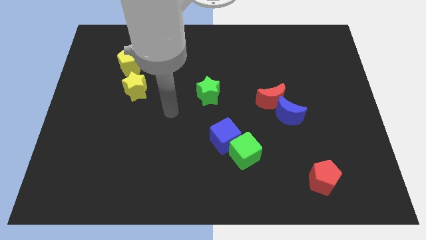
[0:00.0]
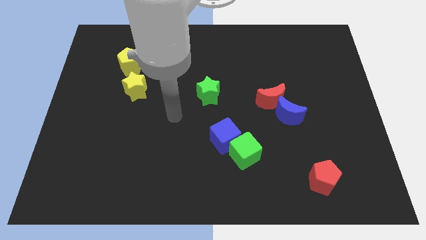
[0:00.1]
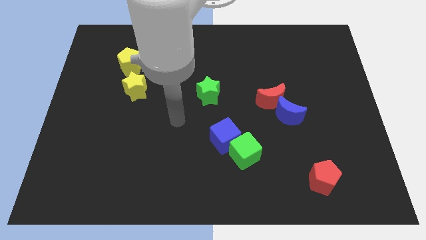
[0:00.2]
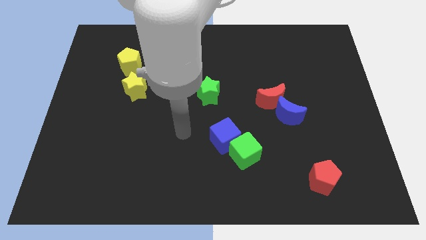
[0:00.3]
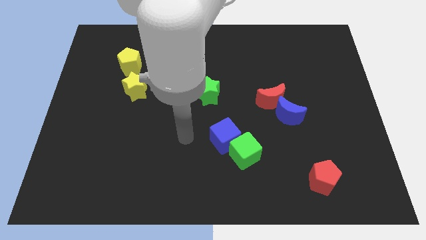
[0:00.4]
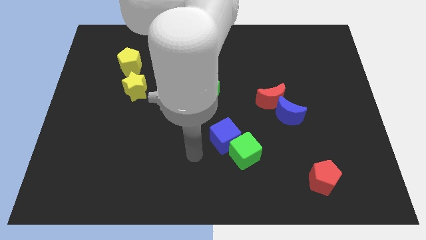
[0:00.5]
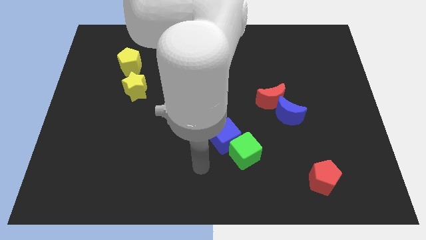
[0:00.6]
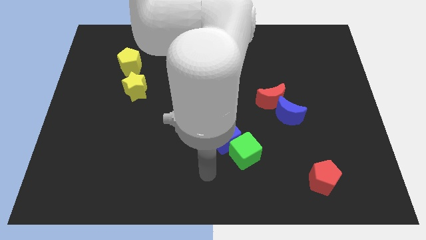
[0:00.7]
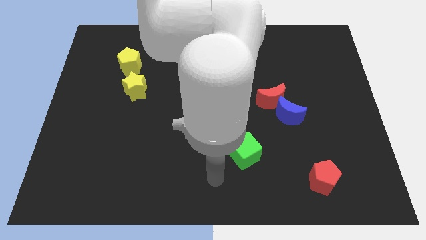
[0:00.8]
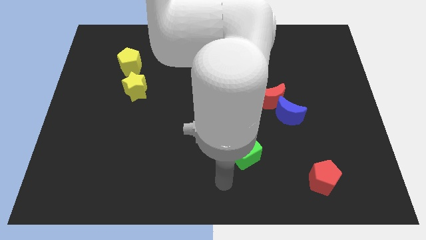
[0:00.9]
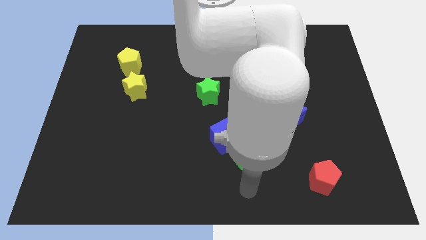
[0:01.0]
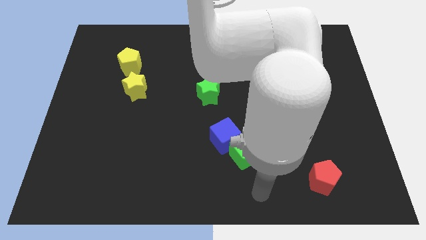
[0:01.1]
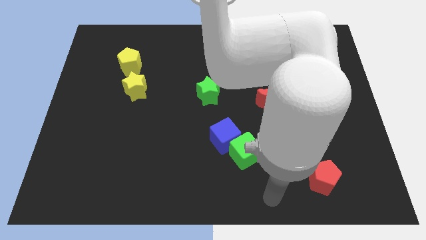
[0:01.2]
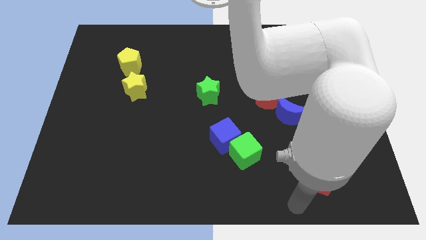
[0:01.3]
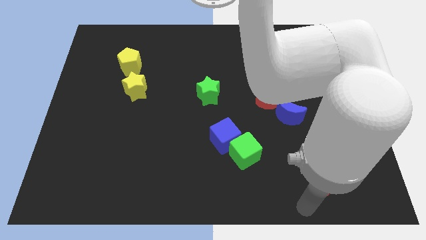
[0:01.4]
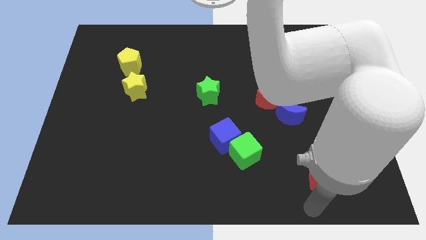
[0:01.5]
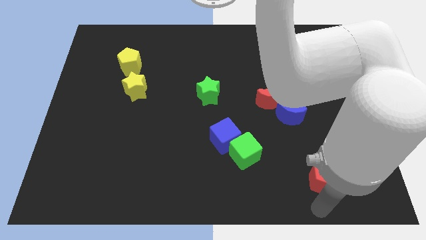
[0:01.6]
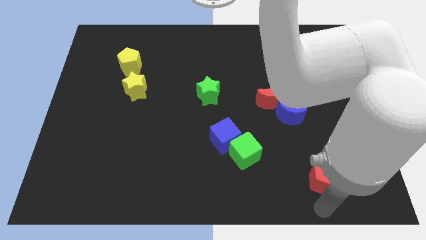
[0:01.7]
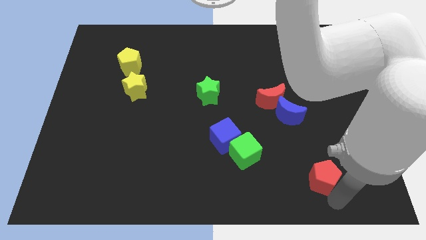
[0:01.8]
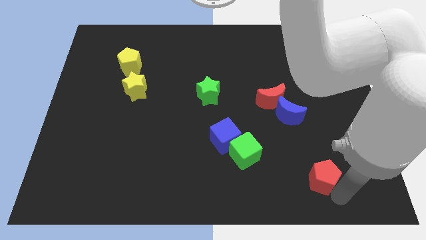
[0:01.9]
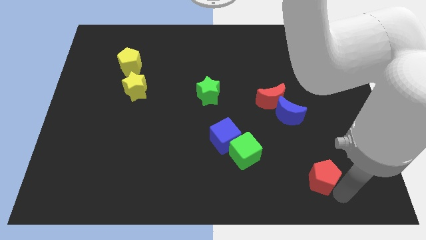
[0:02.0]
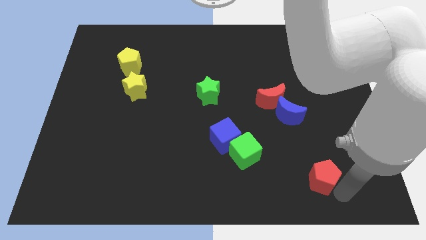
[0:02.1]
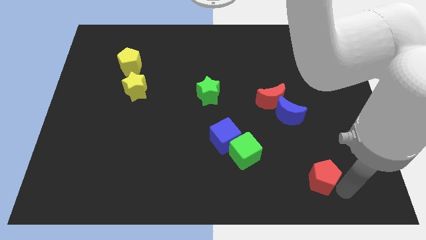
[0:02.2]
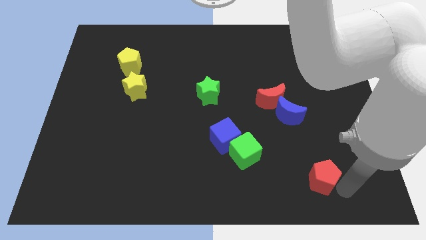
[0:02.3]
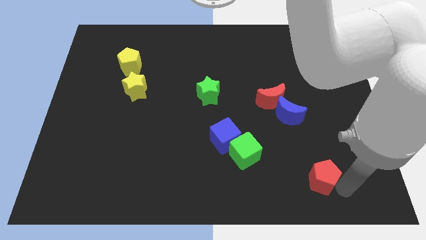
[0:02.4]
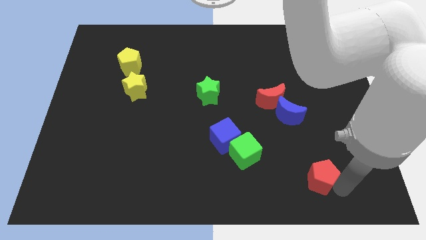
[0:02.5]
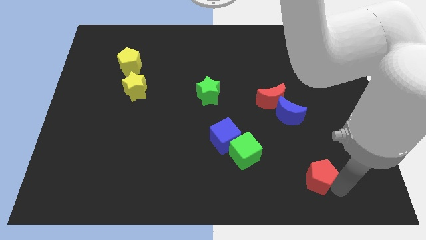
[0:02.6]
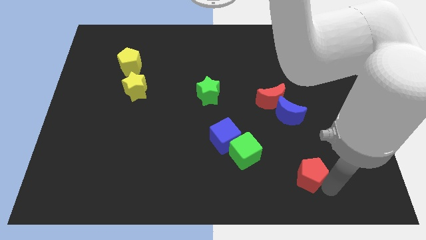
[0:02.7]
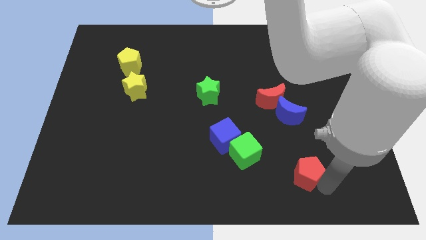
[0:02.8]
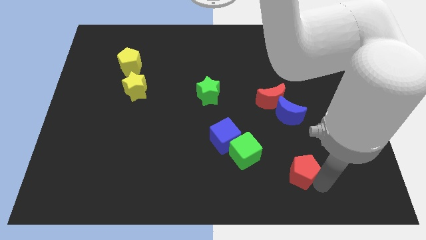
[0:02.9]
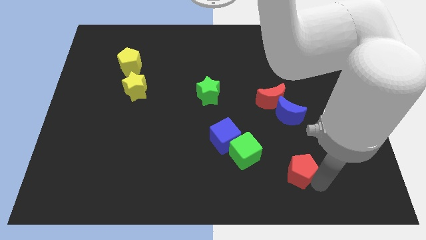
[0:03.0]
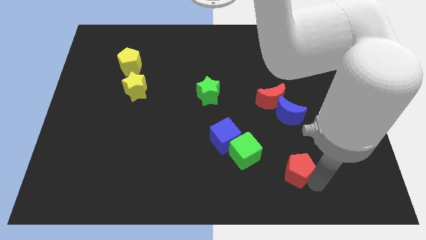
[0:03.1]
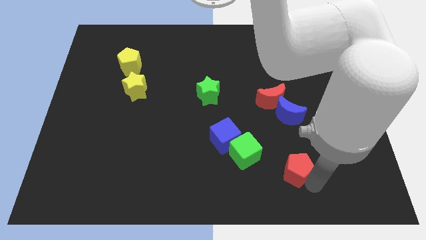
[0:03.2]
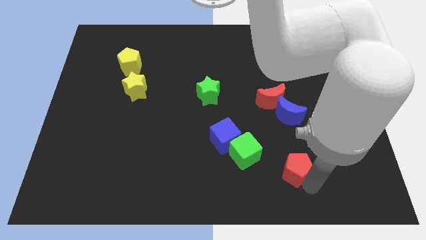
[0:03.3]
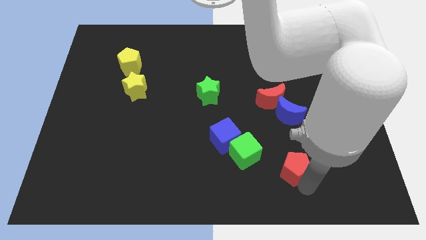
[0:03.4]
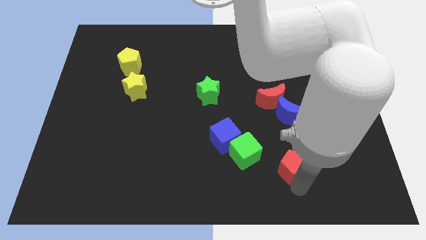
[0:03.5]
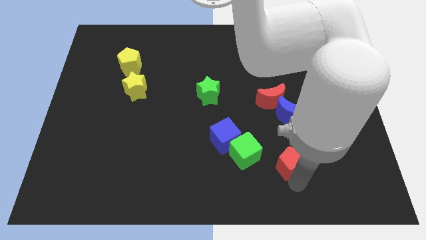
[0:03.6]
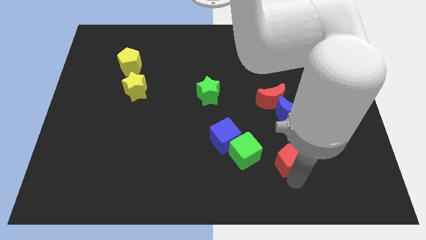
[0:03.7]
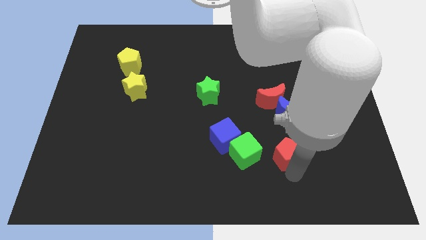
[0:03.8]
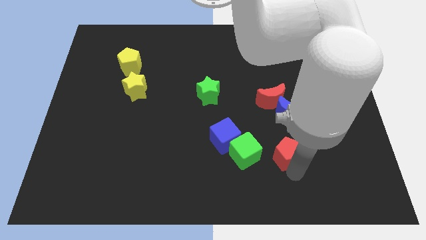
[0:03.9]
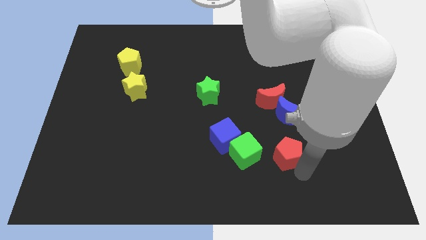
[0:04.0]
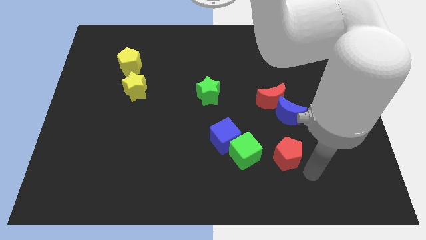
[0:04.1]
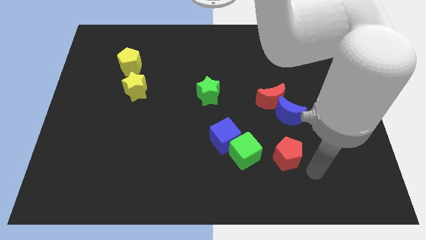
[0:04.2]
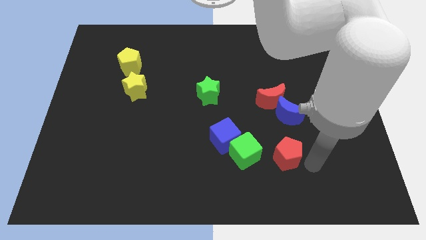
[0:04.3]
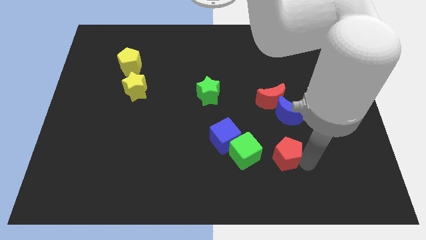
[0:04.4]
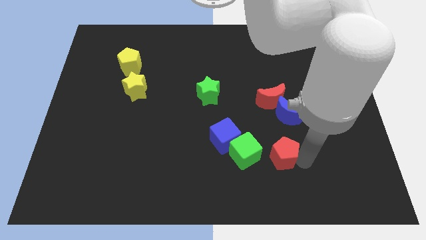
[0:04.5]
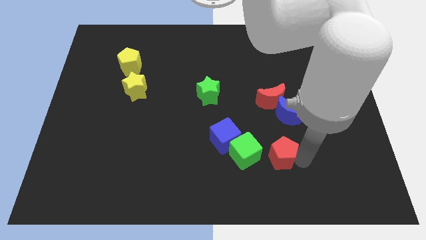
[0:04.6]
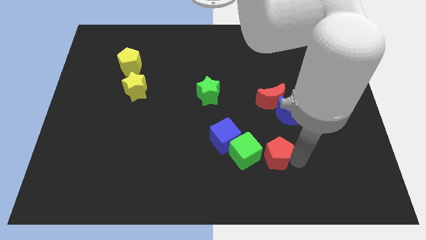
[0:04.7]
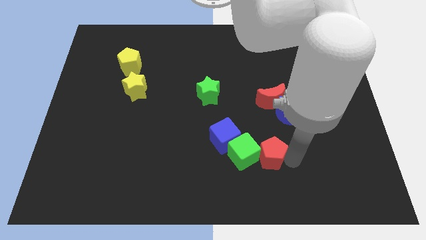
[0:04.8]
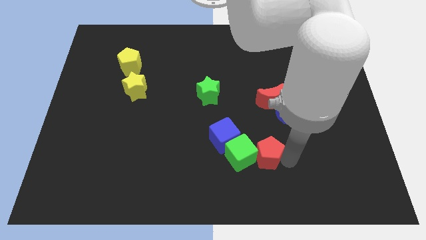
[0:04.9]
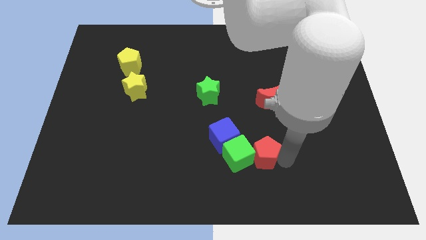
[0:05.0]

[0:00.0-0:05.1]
put the red pentagon close to the green cube

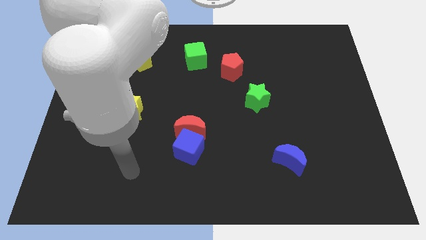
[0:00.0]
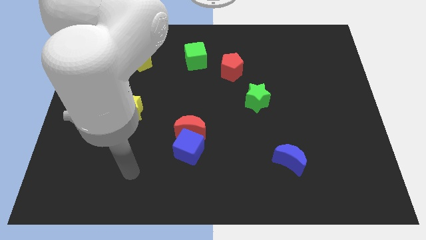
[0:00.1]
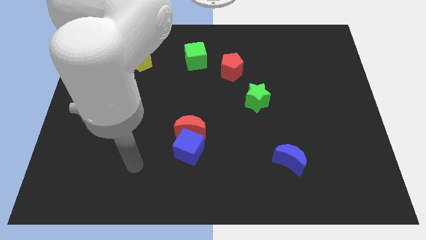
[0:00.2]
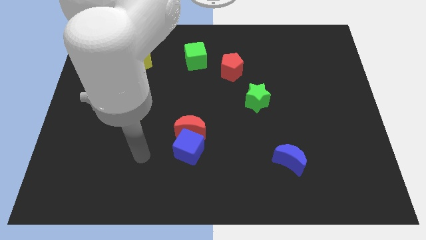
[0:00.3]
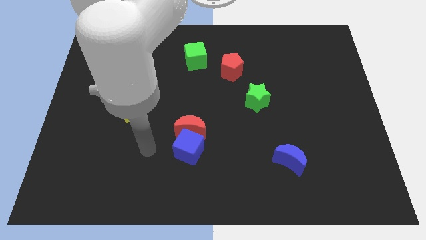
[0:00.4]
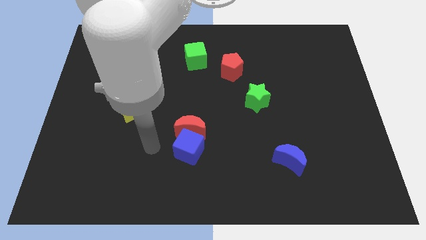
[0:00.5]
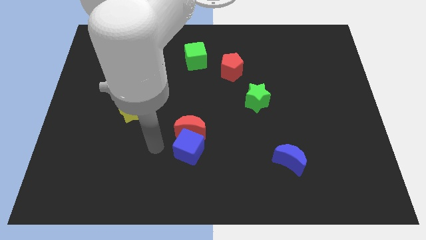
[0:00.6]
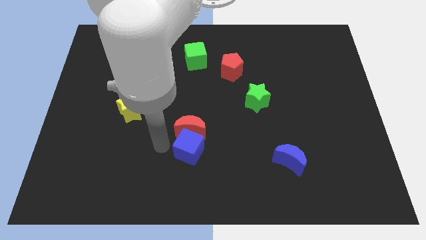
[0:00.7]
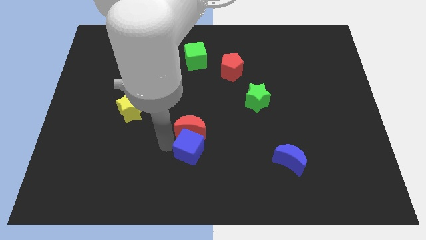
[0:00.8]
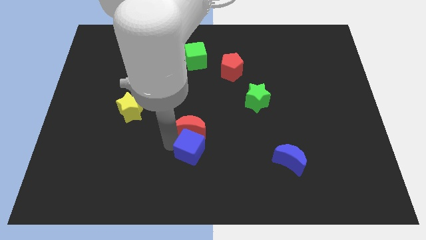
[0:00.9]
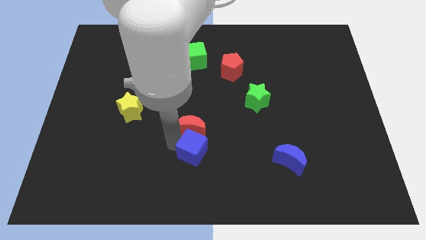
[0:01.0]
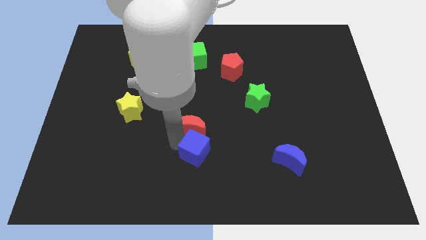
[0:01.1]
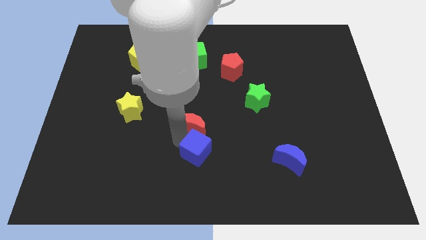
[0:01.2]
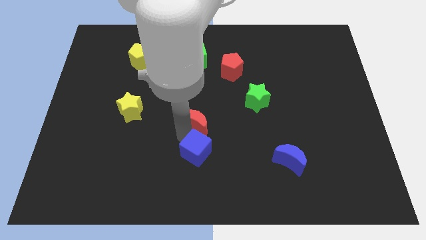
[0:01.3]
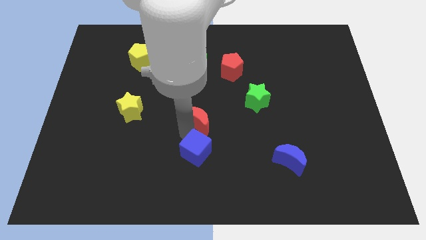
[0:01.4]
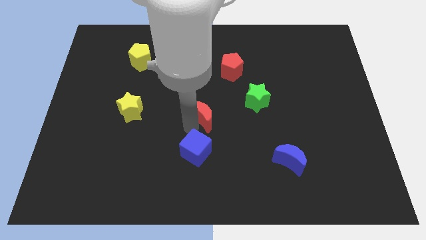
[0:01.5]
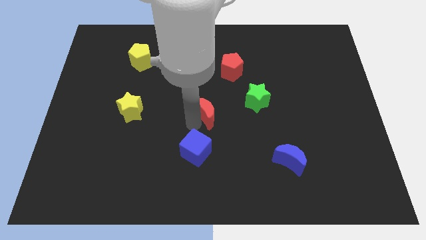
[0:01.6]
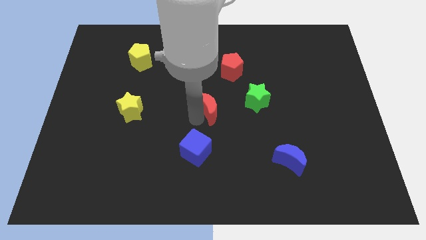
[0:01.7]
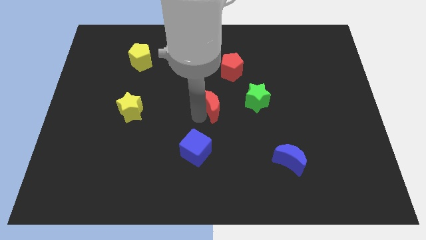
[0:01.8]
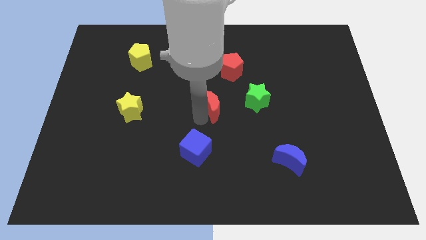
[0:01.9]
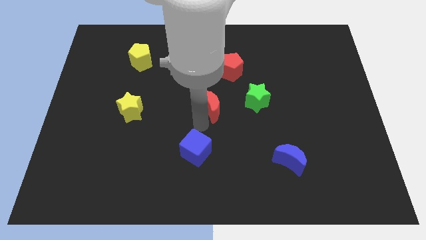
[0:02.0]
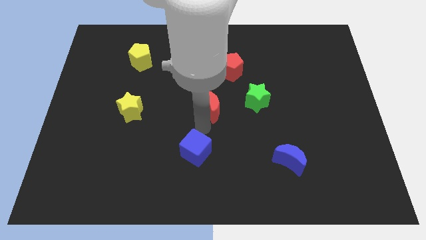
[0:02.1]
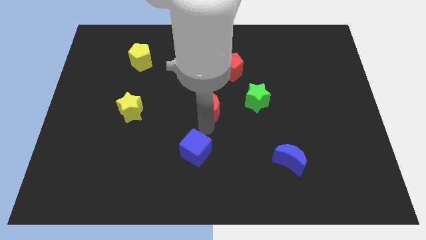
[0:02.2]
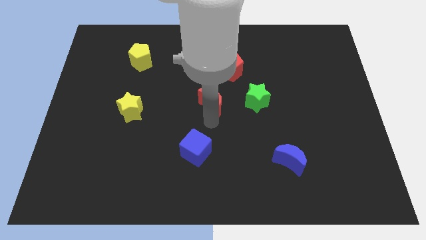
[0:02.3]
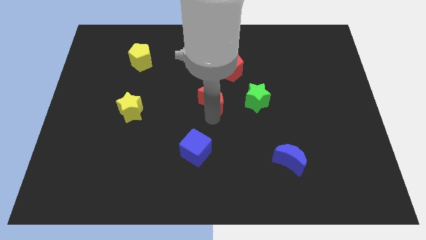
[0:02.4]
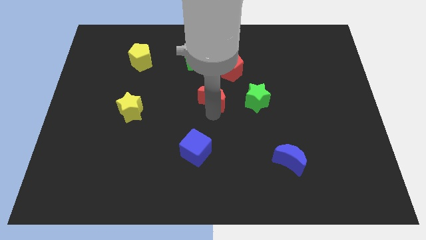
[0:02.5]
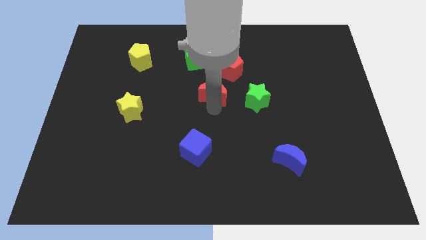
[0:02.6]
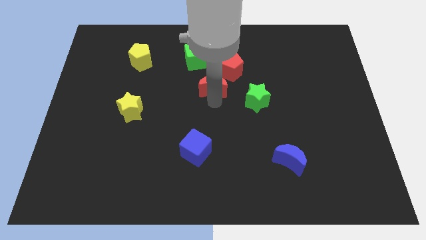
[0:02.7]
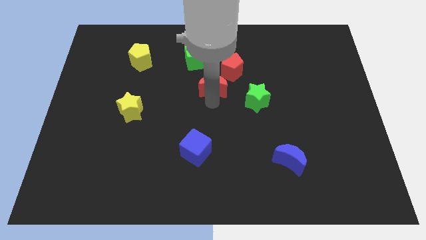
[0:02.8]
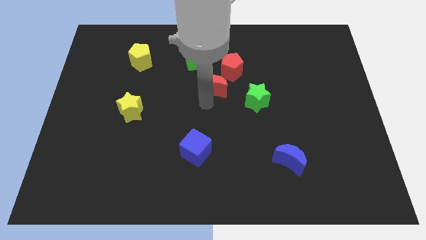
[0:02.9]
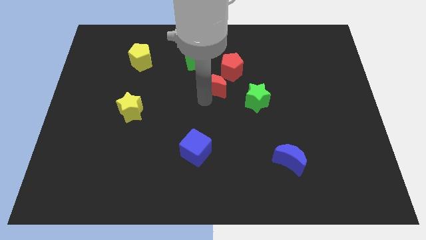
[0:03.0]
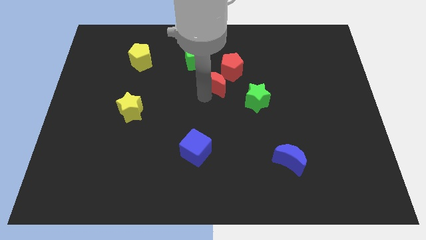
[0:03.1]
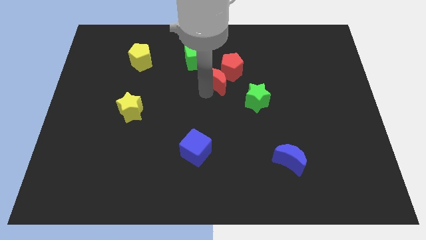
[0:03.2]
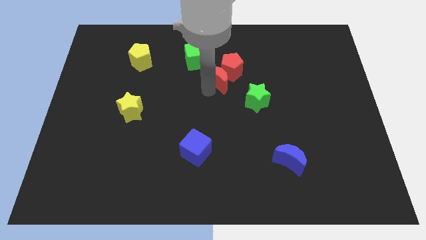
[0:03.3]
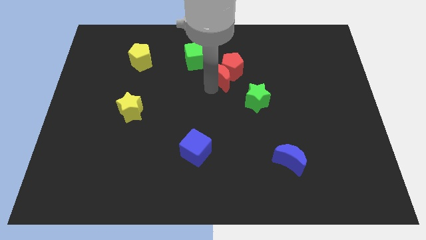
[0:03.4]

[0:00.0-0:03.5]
put the red moon towards the red pentagon
